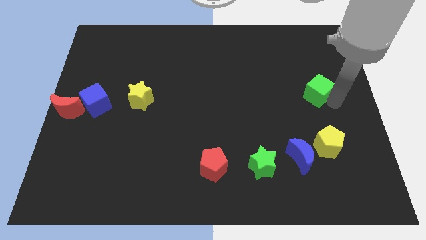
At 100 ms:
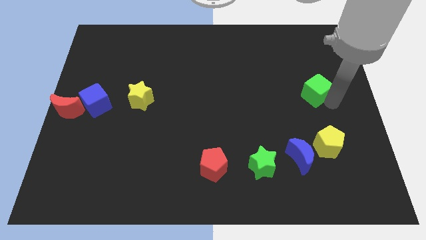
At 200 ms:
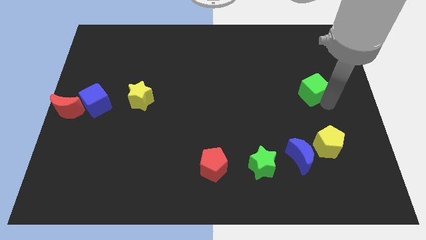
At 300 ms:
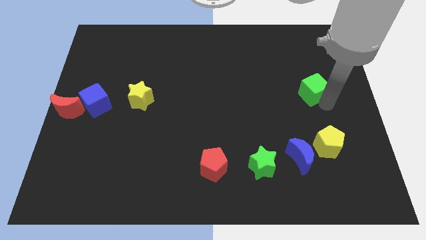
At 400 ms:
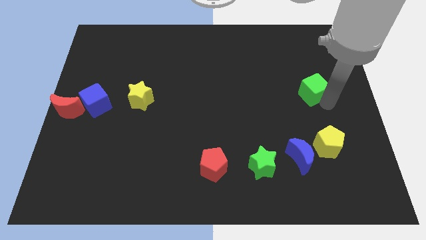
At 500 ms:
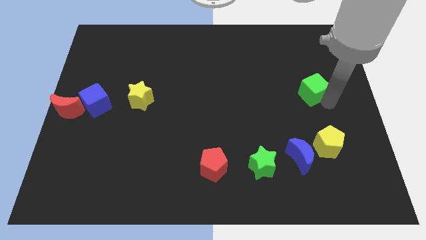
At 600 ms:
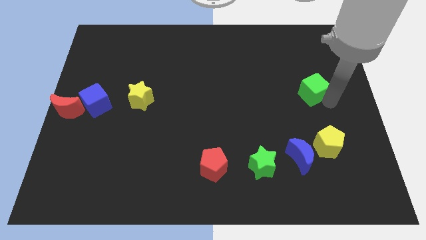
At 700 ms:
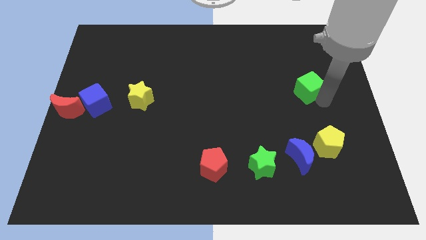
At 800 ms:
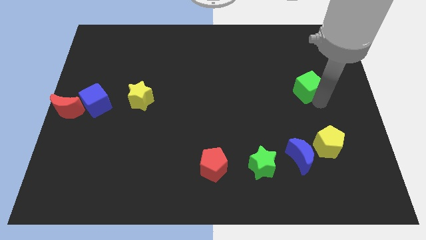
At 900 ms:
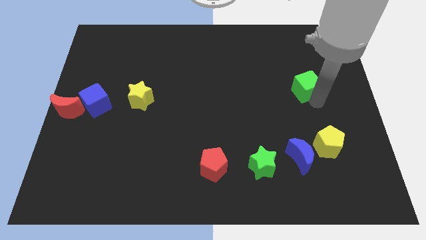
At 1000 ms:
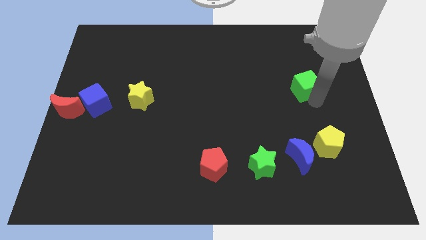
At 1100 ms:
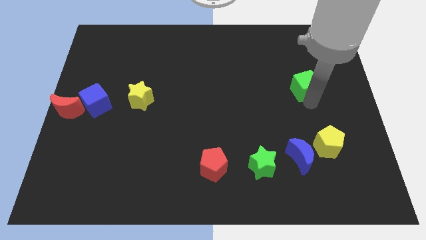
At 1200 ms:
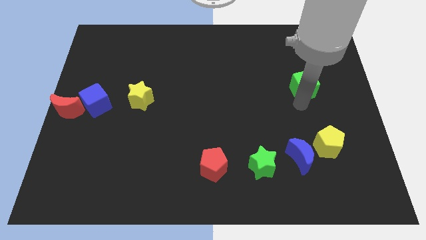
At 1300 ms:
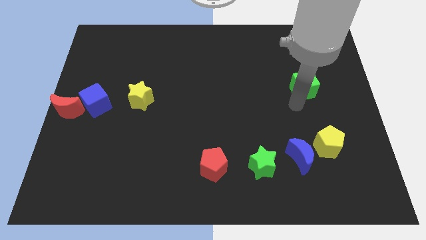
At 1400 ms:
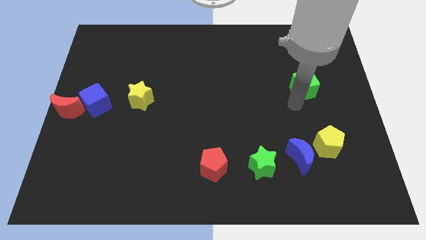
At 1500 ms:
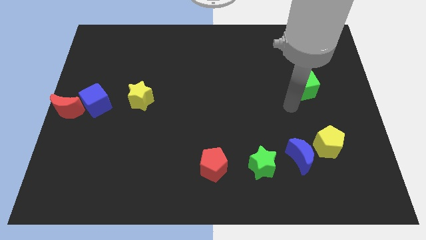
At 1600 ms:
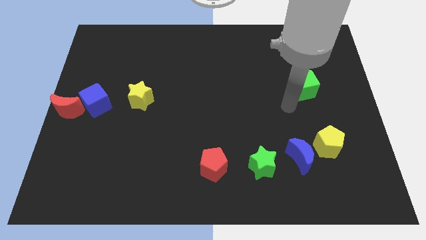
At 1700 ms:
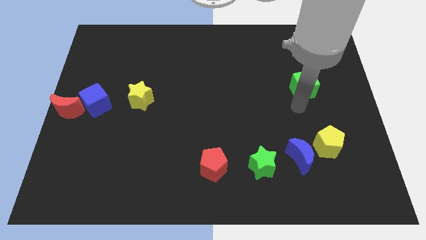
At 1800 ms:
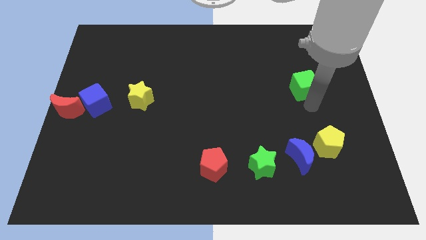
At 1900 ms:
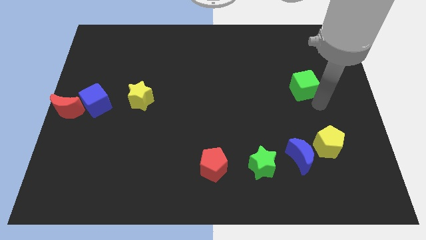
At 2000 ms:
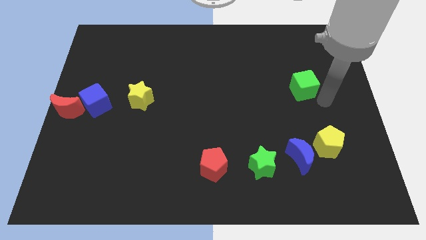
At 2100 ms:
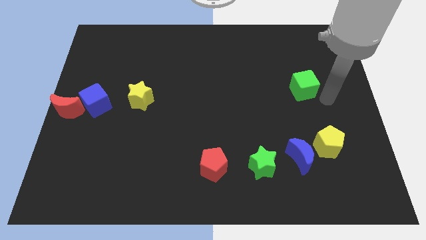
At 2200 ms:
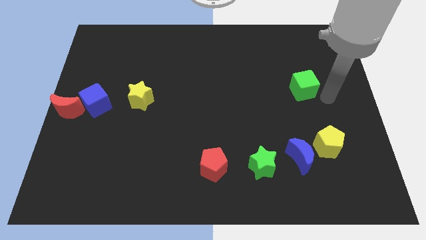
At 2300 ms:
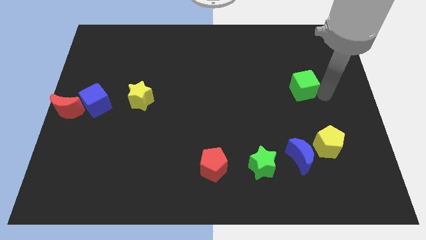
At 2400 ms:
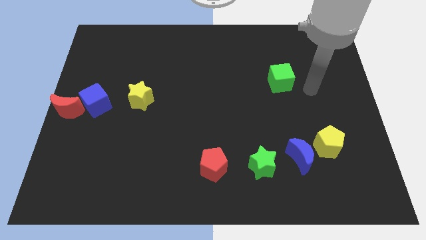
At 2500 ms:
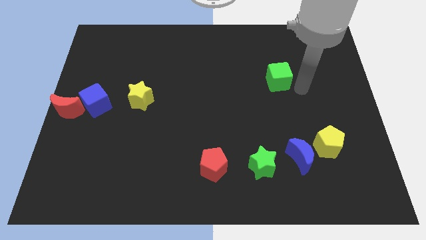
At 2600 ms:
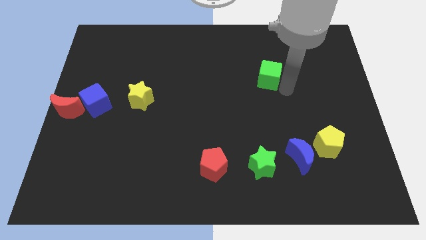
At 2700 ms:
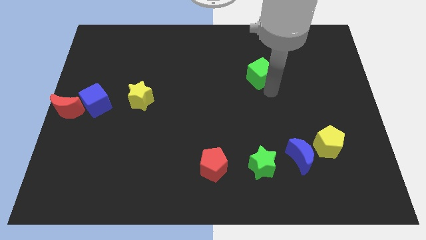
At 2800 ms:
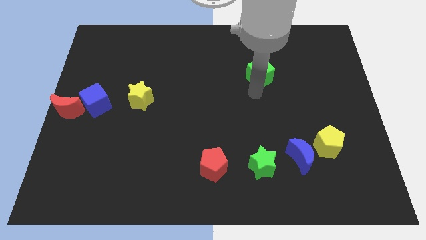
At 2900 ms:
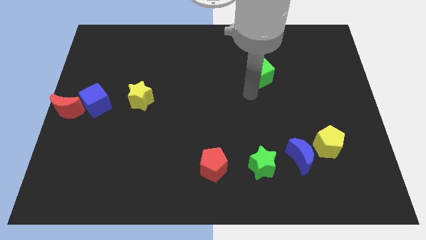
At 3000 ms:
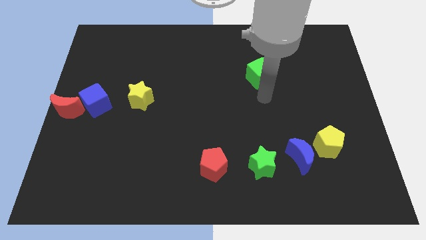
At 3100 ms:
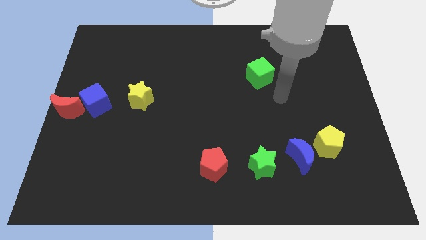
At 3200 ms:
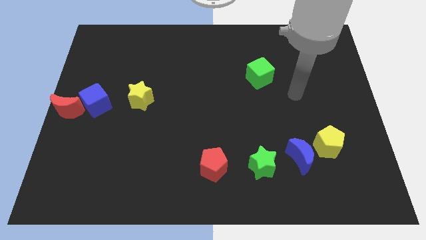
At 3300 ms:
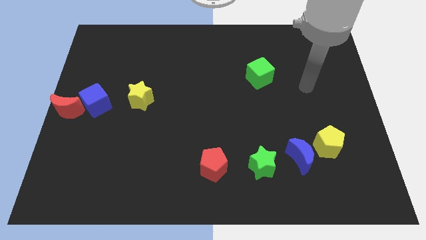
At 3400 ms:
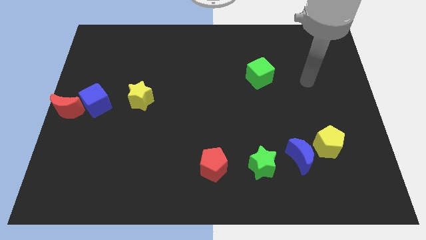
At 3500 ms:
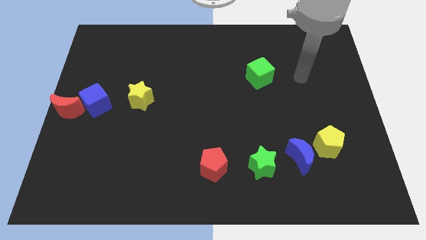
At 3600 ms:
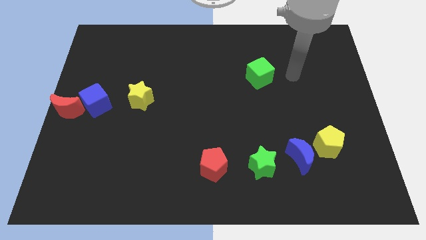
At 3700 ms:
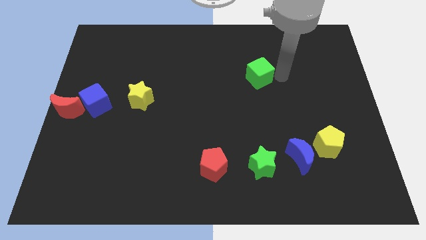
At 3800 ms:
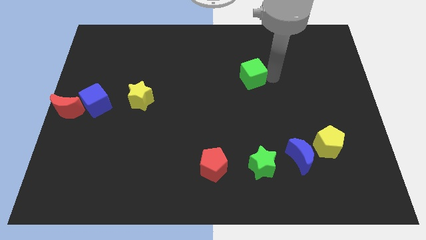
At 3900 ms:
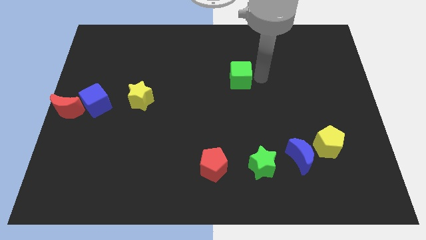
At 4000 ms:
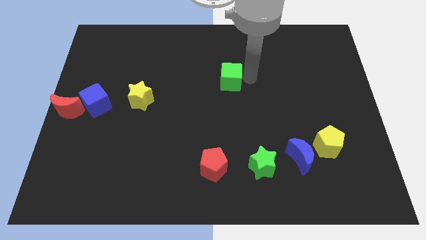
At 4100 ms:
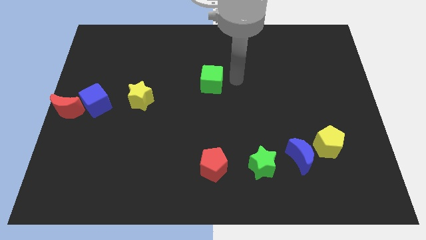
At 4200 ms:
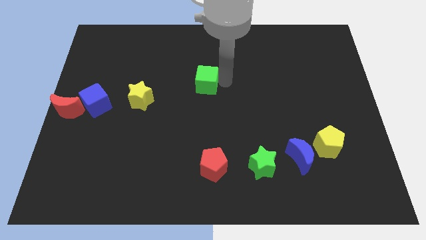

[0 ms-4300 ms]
move the green cube towards the yellow star

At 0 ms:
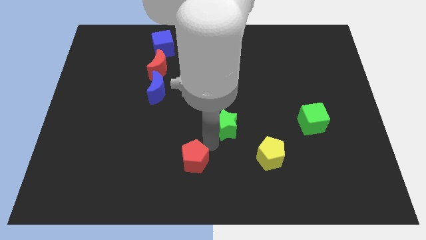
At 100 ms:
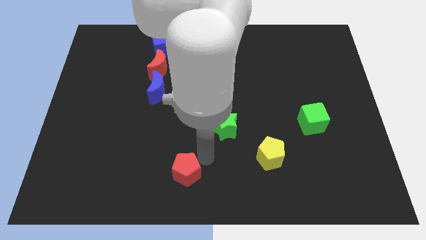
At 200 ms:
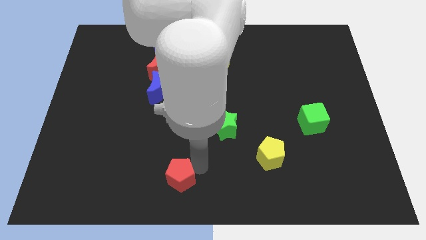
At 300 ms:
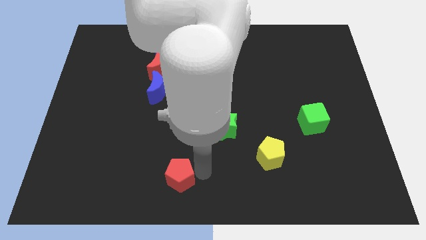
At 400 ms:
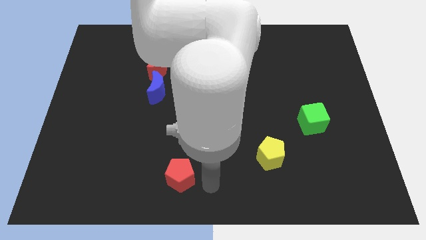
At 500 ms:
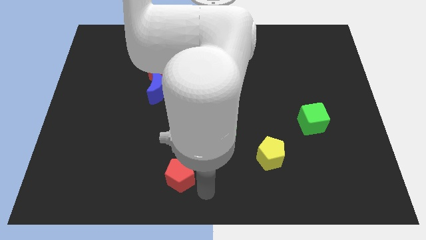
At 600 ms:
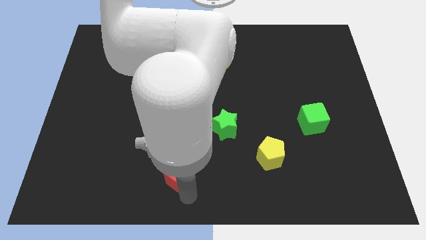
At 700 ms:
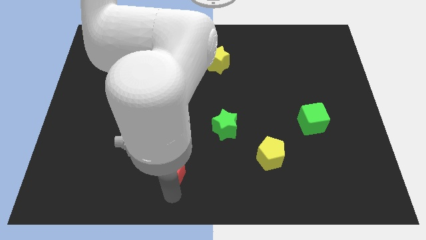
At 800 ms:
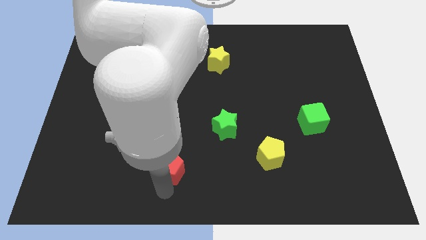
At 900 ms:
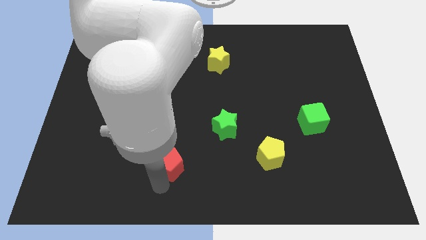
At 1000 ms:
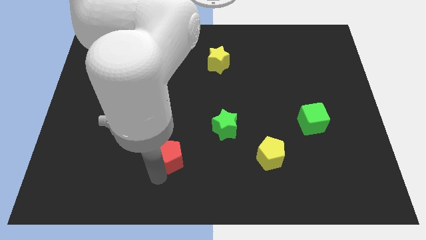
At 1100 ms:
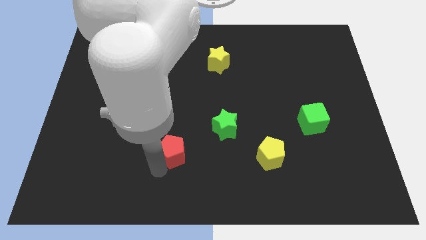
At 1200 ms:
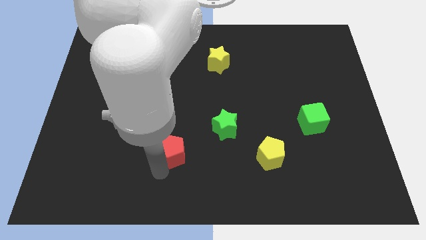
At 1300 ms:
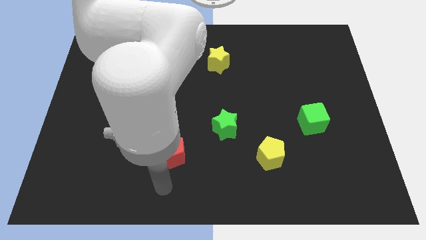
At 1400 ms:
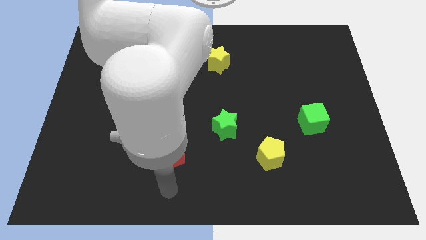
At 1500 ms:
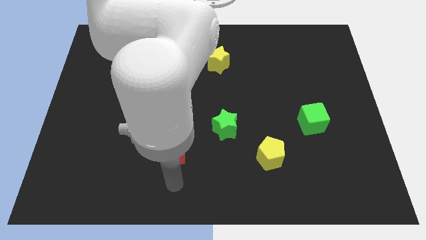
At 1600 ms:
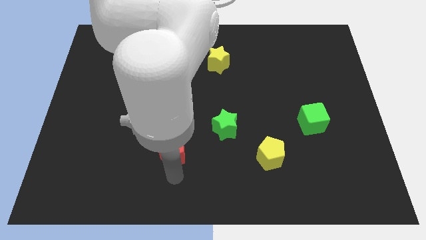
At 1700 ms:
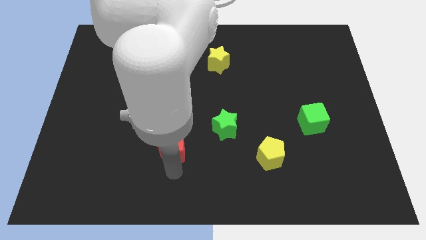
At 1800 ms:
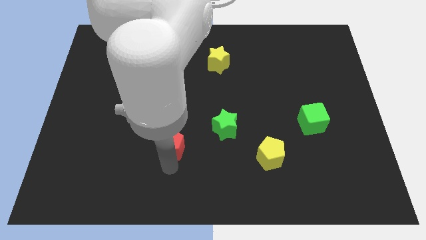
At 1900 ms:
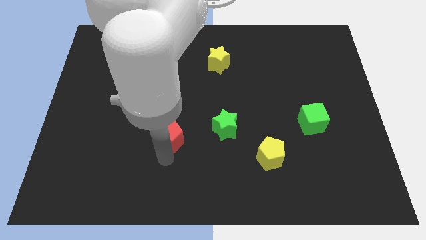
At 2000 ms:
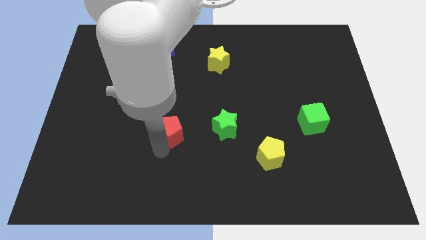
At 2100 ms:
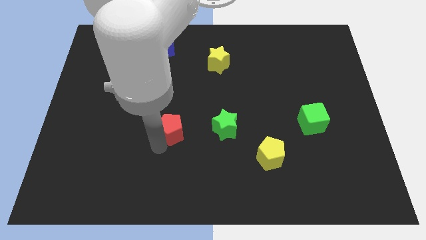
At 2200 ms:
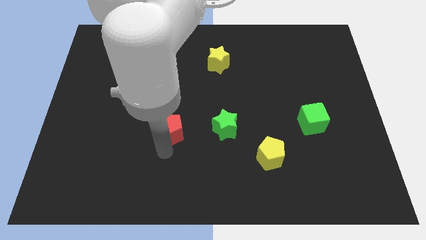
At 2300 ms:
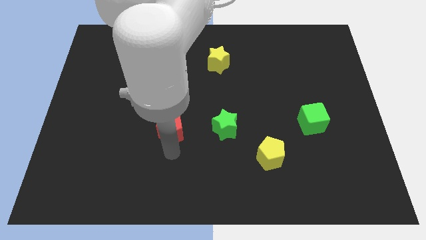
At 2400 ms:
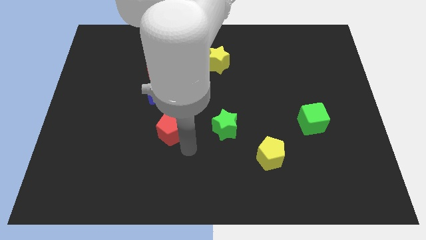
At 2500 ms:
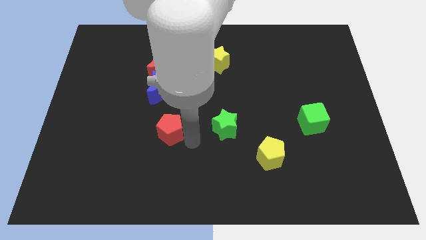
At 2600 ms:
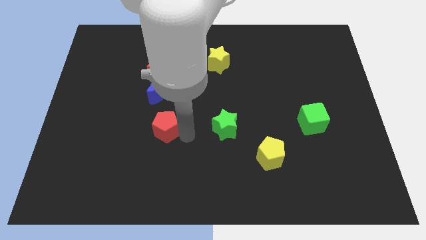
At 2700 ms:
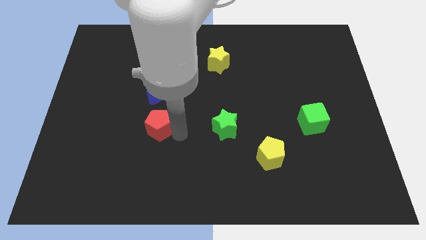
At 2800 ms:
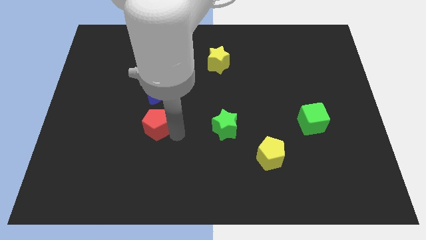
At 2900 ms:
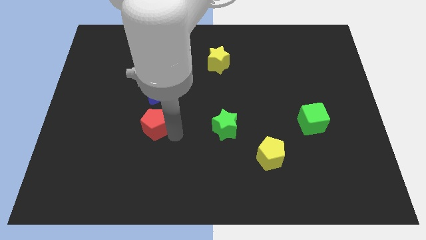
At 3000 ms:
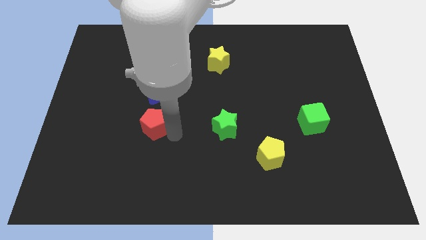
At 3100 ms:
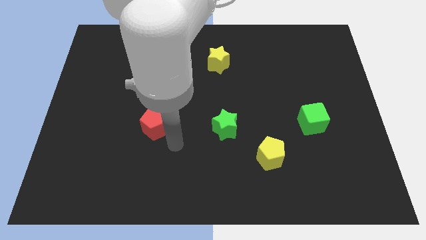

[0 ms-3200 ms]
place the red pentagon under the blue crescent

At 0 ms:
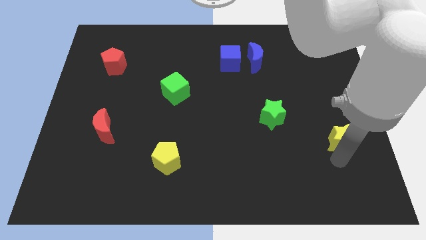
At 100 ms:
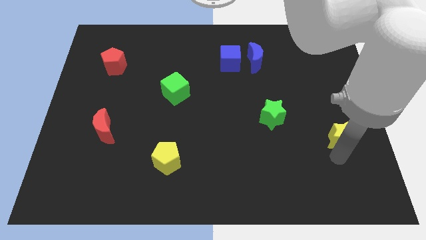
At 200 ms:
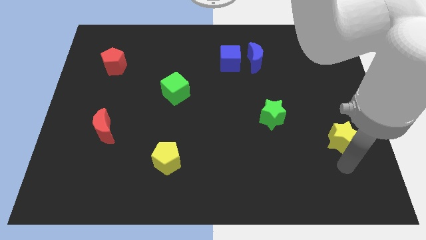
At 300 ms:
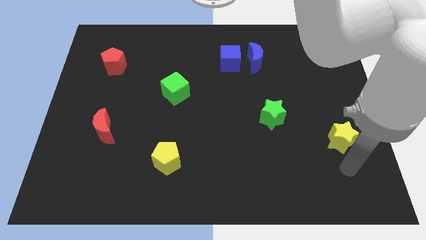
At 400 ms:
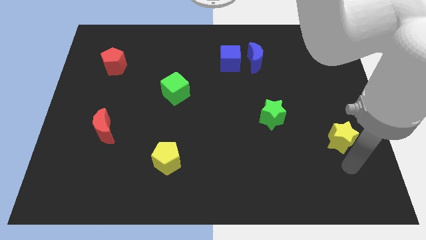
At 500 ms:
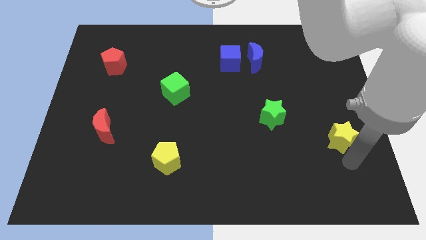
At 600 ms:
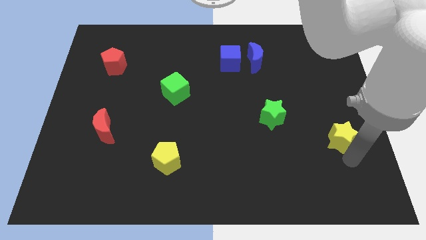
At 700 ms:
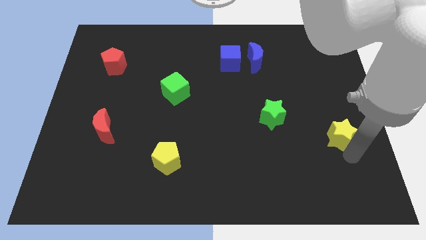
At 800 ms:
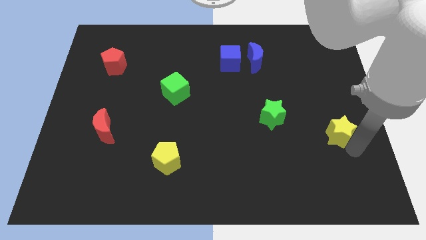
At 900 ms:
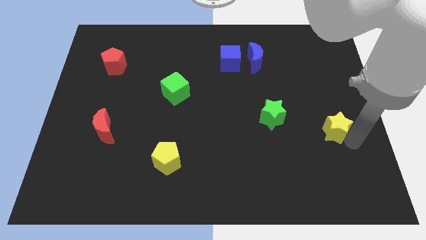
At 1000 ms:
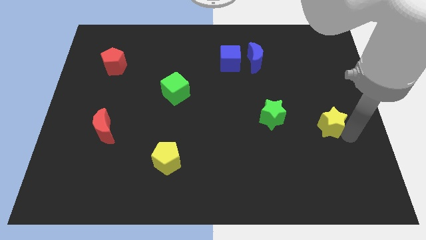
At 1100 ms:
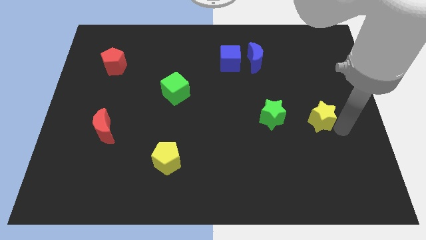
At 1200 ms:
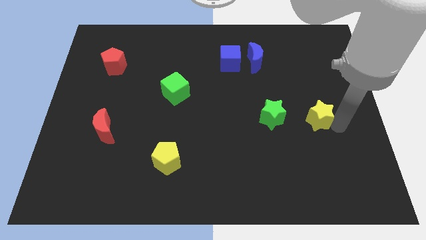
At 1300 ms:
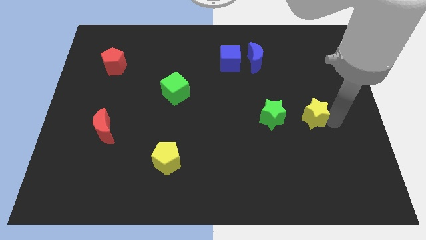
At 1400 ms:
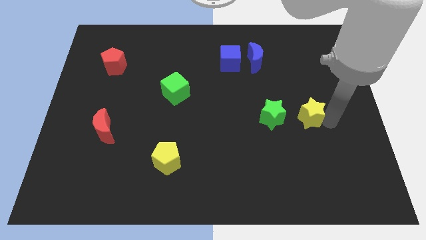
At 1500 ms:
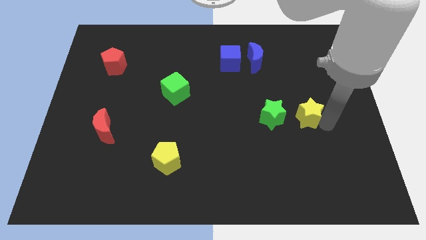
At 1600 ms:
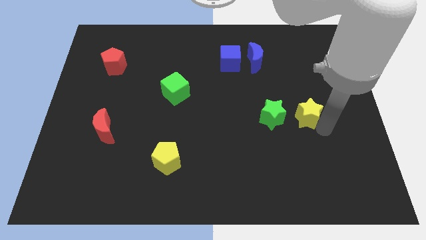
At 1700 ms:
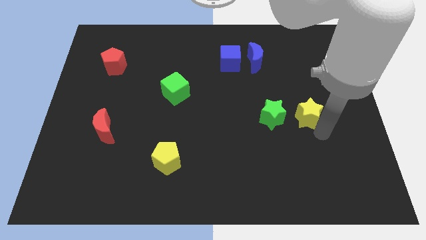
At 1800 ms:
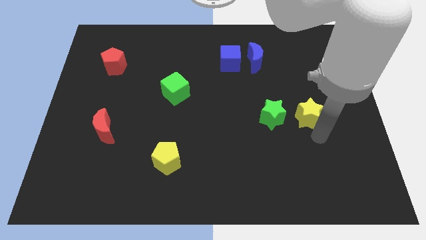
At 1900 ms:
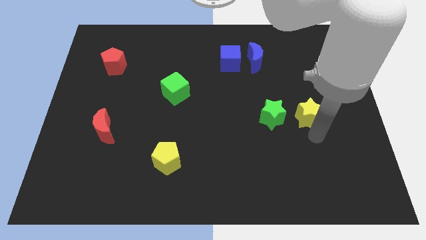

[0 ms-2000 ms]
place the yellow star to the right of the green star
